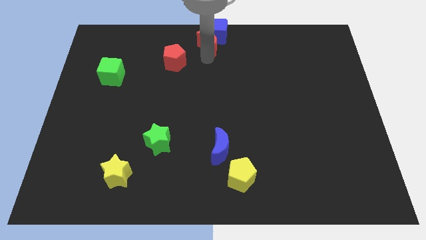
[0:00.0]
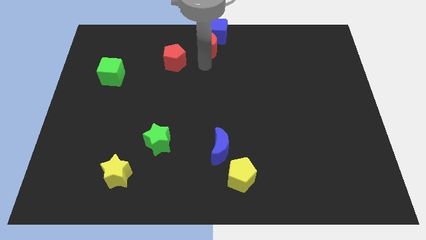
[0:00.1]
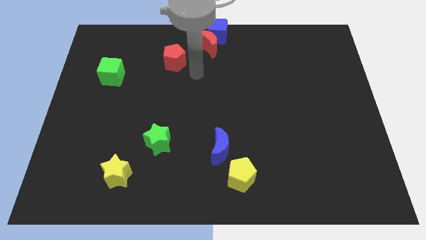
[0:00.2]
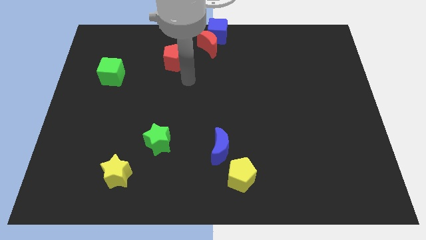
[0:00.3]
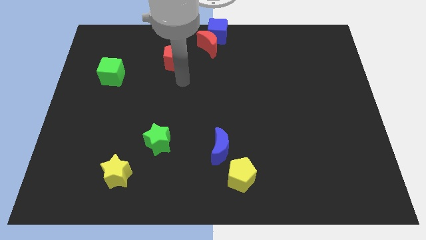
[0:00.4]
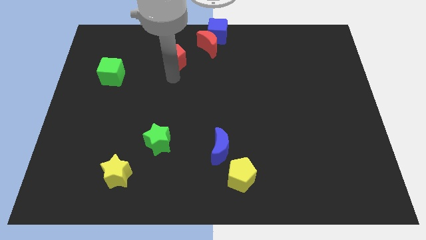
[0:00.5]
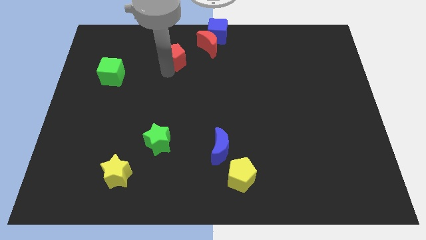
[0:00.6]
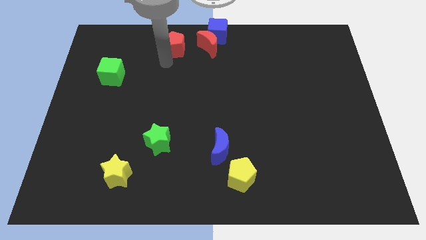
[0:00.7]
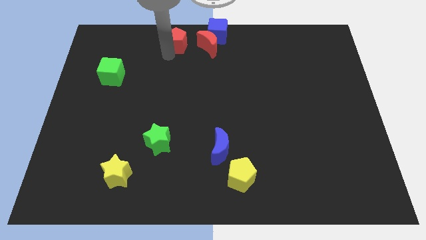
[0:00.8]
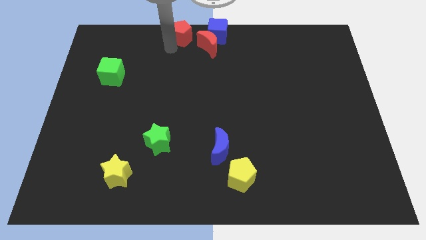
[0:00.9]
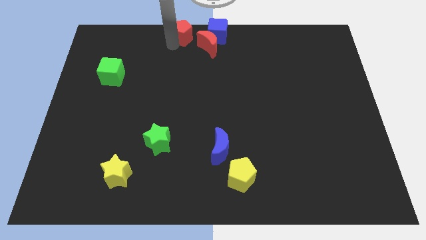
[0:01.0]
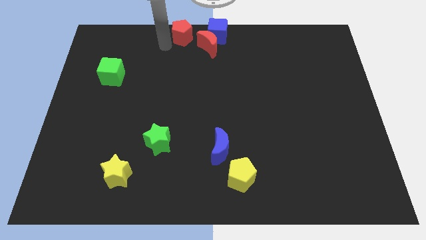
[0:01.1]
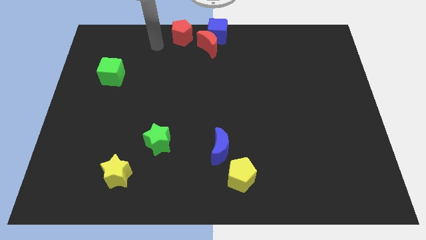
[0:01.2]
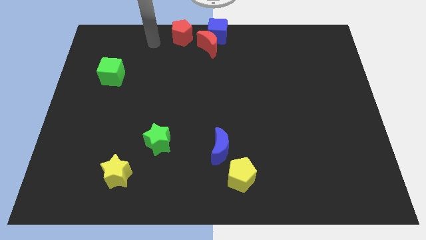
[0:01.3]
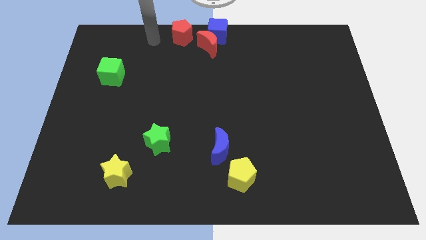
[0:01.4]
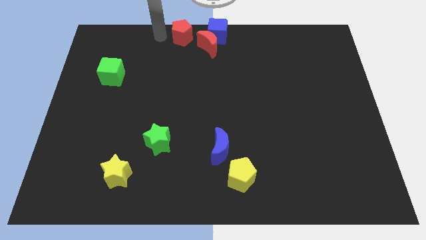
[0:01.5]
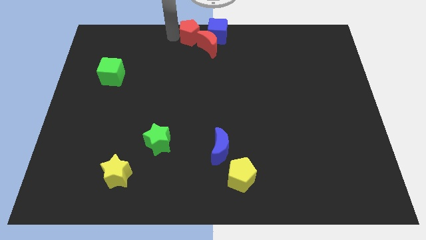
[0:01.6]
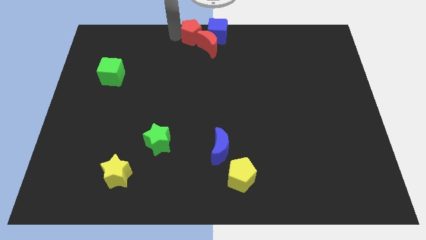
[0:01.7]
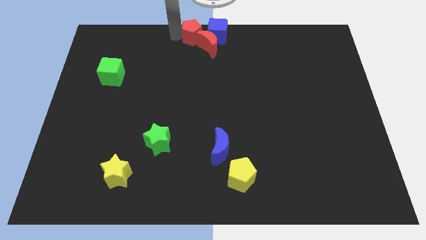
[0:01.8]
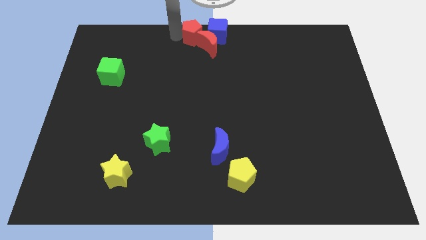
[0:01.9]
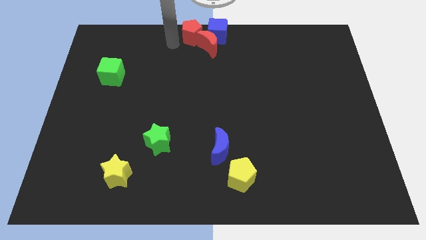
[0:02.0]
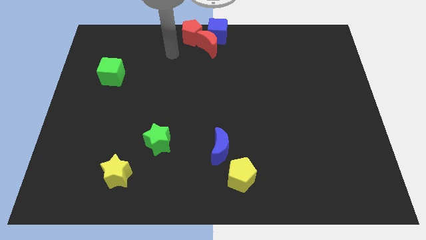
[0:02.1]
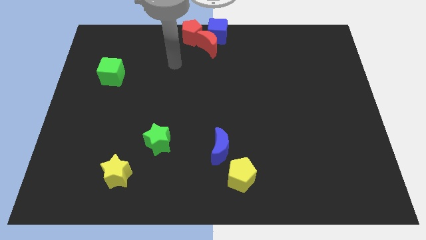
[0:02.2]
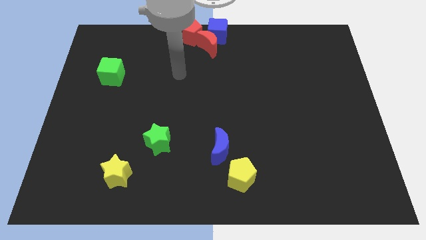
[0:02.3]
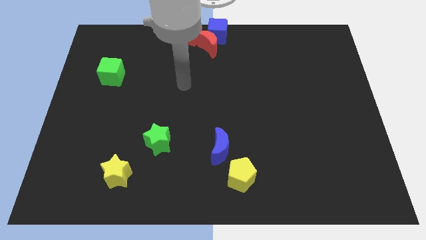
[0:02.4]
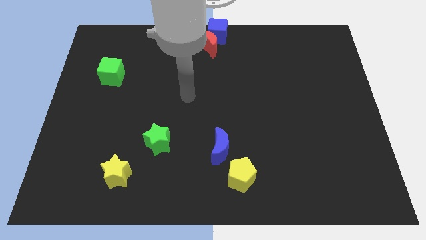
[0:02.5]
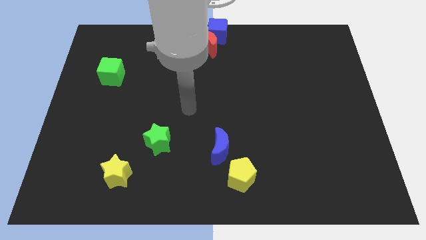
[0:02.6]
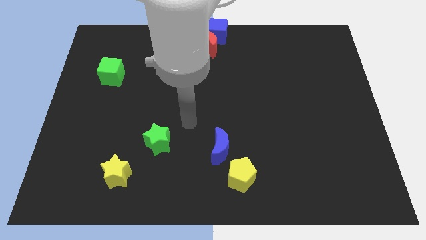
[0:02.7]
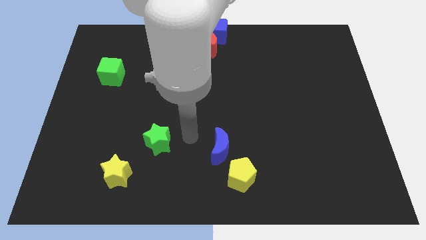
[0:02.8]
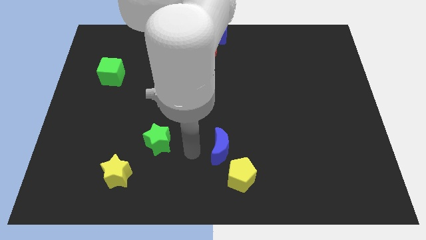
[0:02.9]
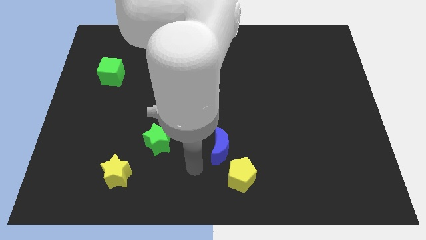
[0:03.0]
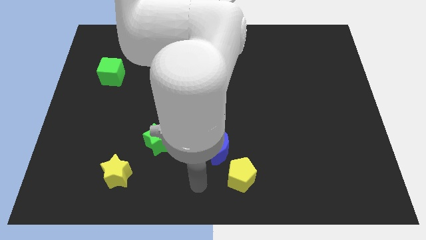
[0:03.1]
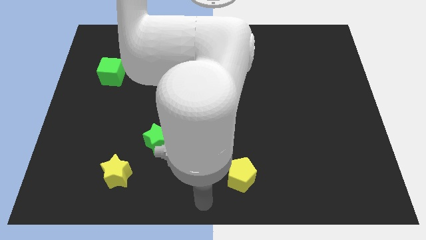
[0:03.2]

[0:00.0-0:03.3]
place the red pentagon to the left side of blue cube

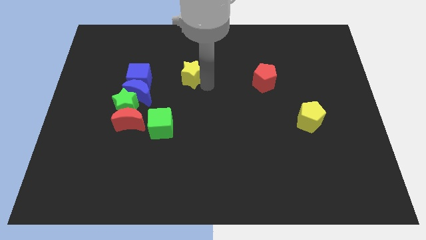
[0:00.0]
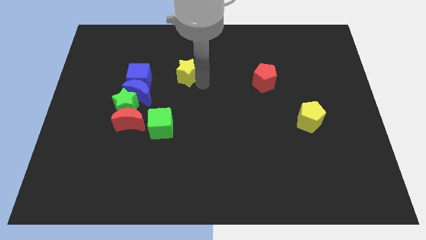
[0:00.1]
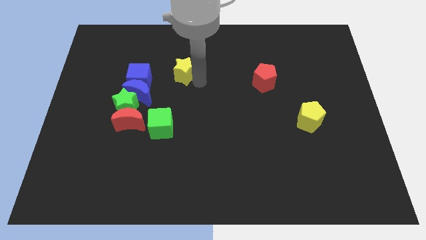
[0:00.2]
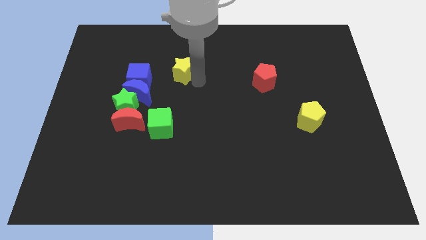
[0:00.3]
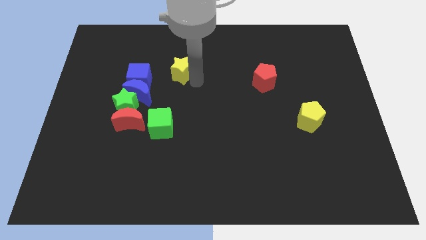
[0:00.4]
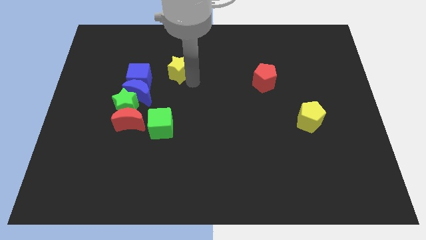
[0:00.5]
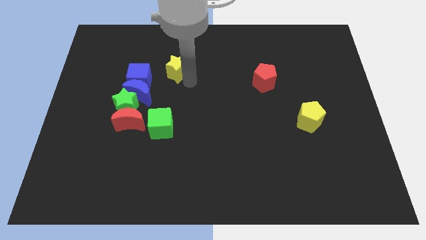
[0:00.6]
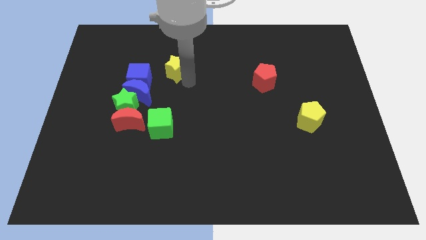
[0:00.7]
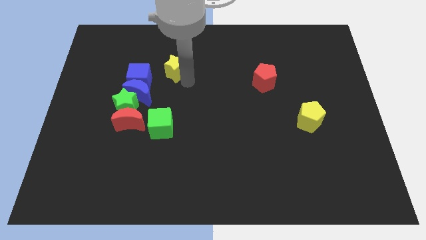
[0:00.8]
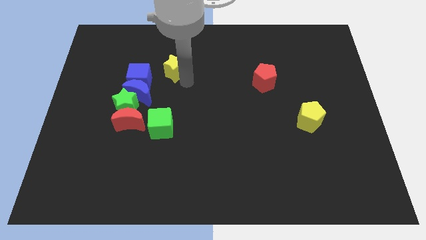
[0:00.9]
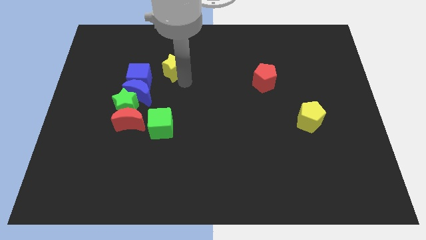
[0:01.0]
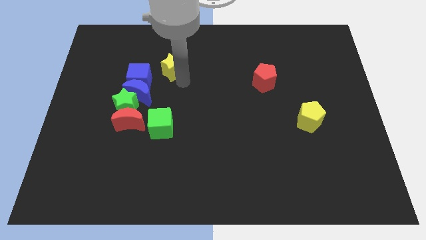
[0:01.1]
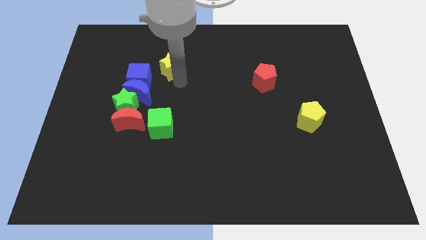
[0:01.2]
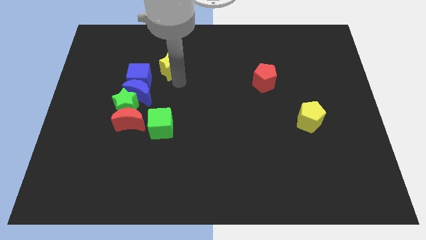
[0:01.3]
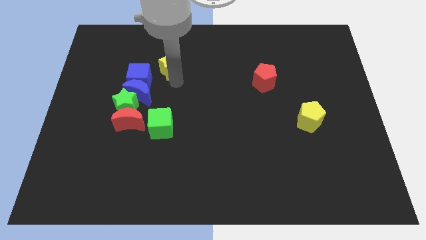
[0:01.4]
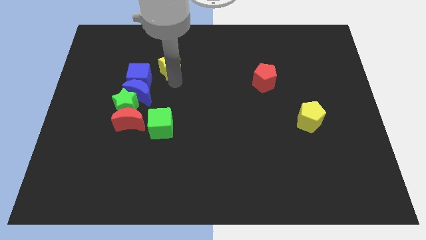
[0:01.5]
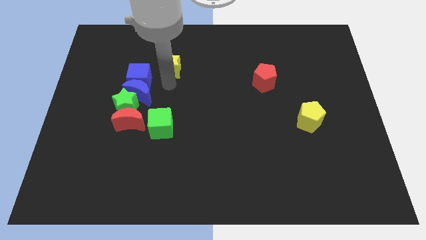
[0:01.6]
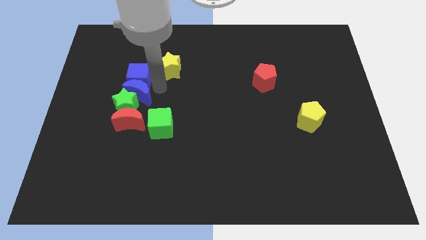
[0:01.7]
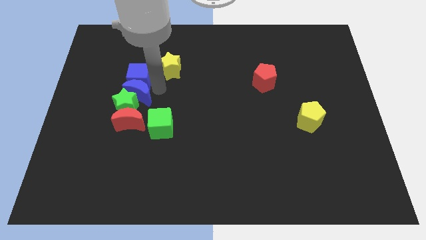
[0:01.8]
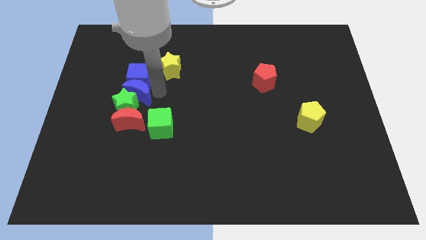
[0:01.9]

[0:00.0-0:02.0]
push the yellow star slightly to the left

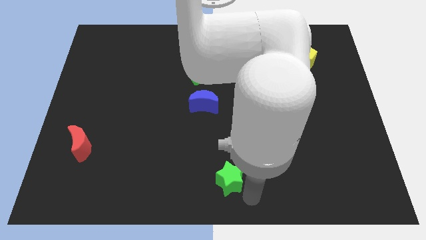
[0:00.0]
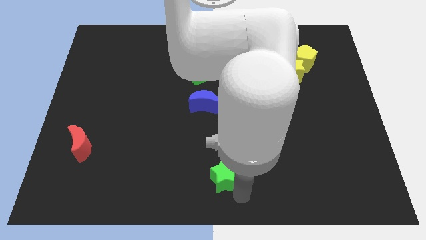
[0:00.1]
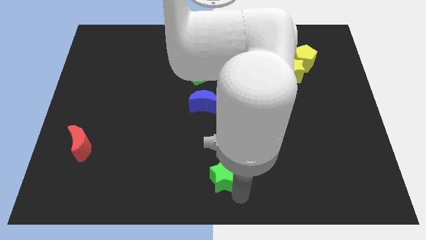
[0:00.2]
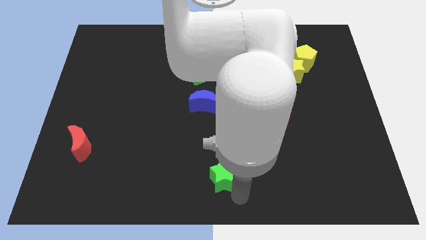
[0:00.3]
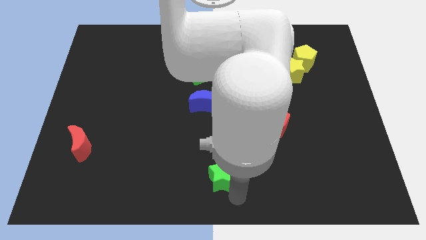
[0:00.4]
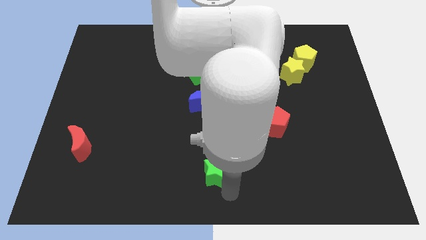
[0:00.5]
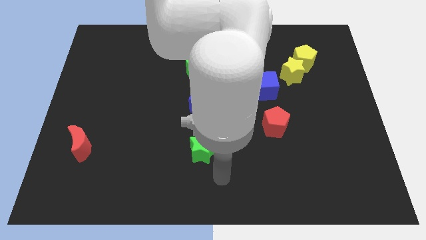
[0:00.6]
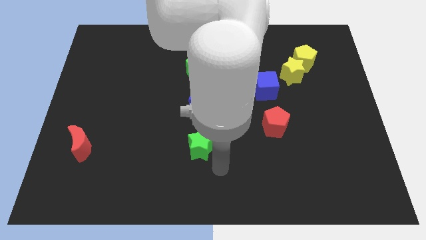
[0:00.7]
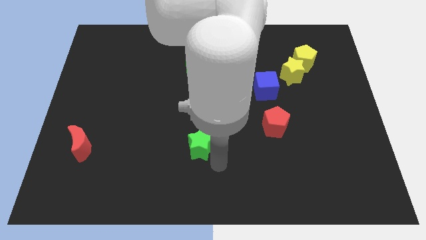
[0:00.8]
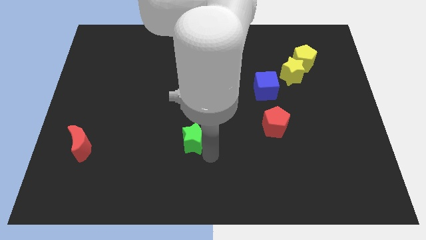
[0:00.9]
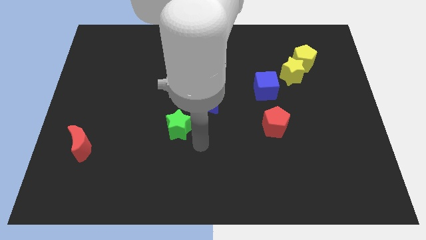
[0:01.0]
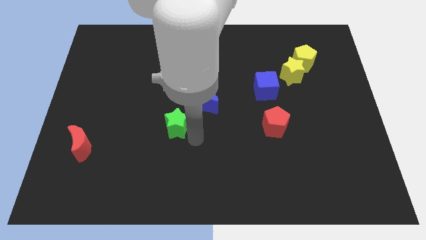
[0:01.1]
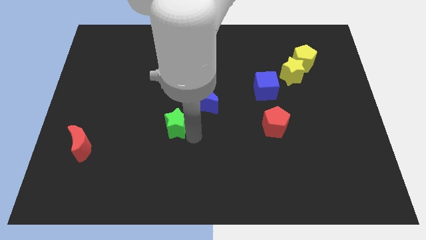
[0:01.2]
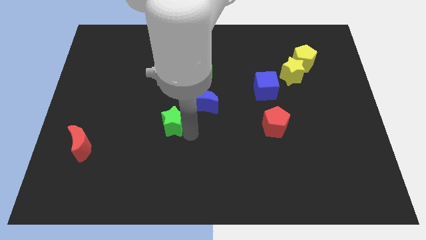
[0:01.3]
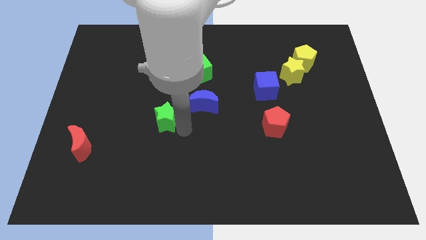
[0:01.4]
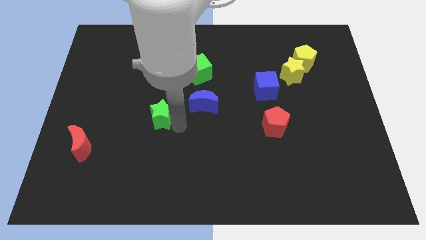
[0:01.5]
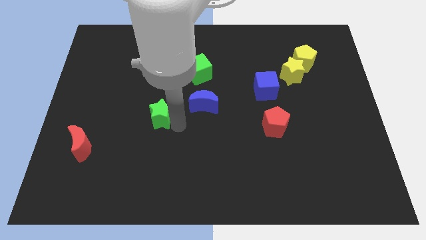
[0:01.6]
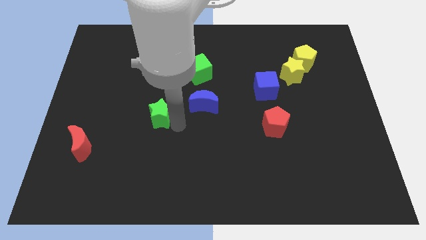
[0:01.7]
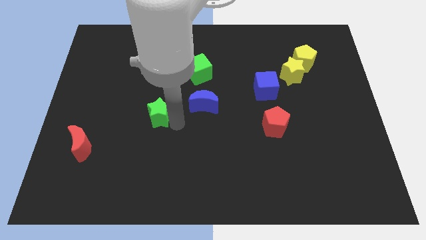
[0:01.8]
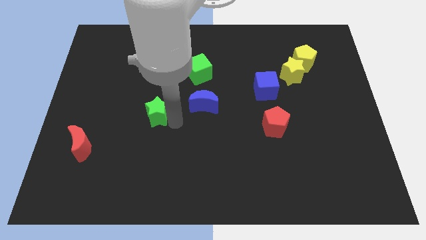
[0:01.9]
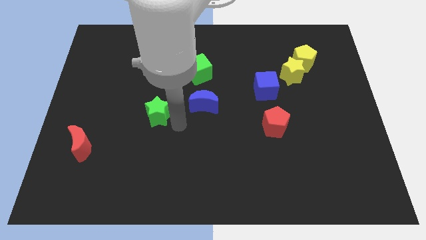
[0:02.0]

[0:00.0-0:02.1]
slide green star up to the left of blue moon

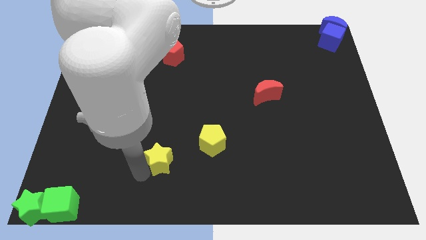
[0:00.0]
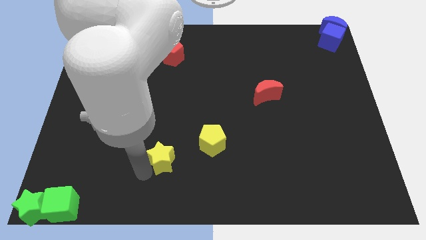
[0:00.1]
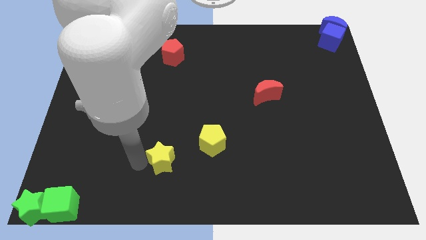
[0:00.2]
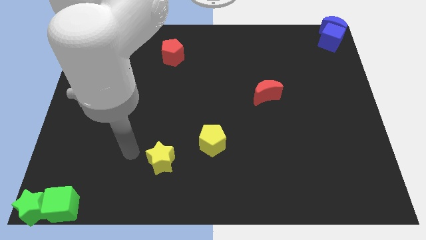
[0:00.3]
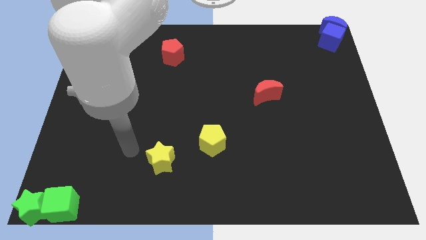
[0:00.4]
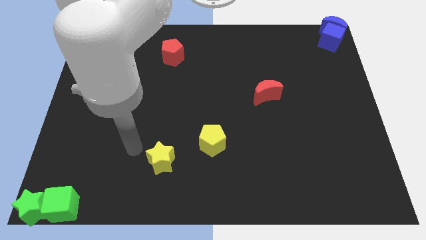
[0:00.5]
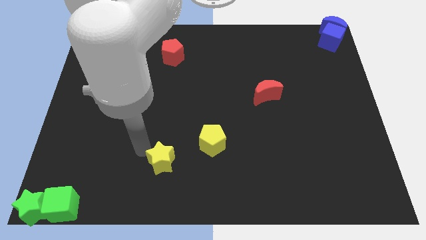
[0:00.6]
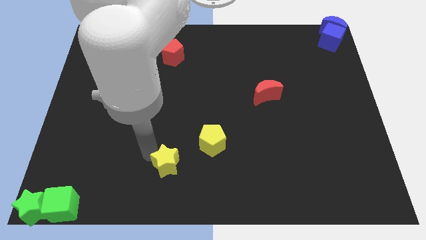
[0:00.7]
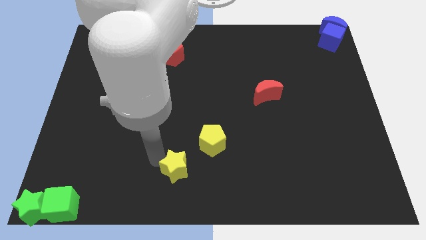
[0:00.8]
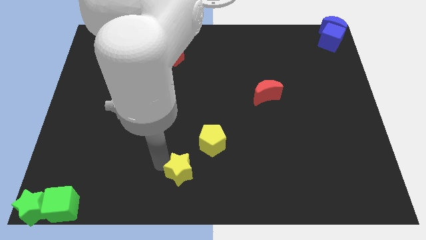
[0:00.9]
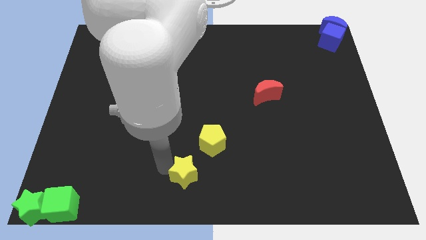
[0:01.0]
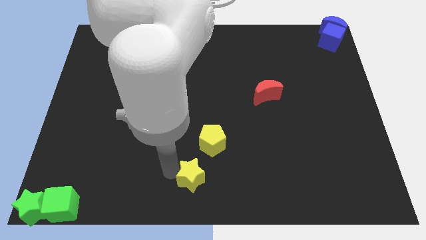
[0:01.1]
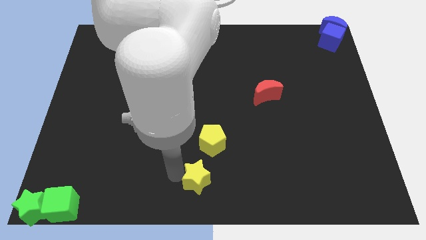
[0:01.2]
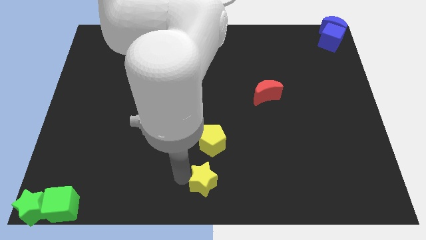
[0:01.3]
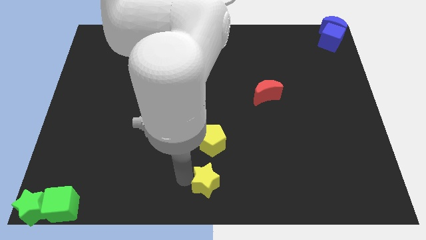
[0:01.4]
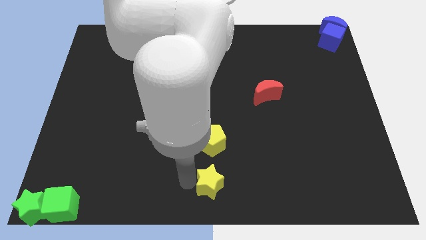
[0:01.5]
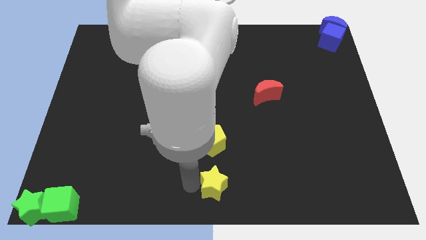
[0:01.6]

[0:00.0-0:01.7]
move the yellow star below the yellow pentagon
